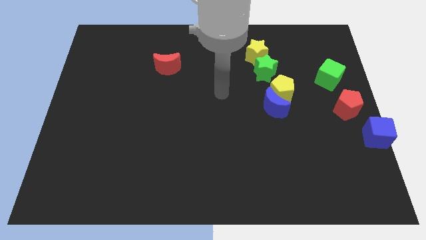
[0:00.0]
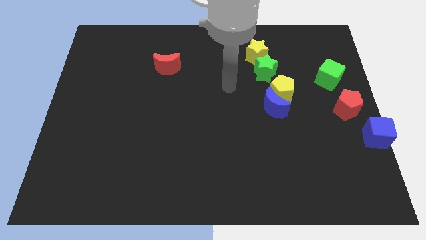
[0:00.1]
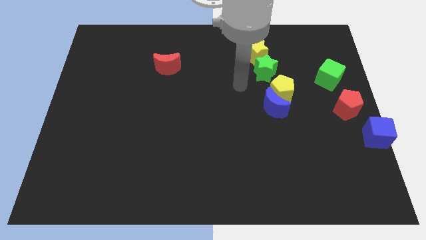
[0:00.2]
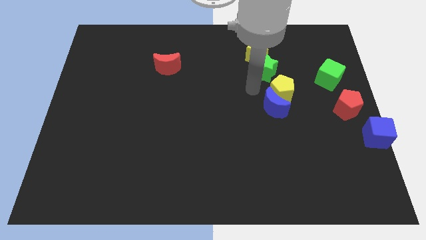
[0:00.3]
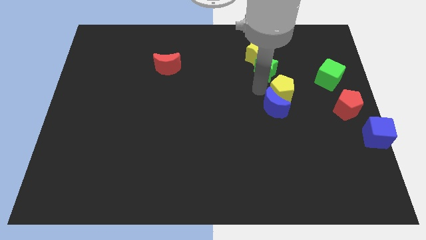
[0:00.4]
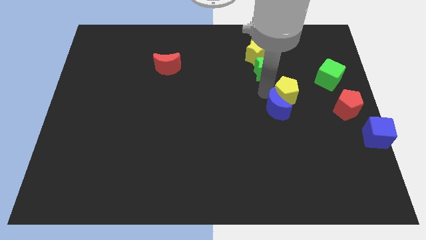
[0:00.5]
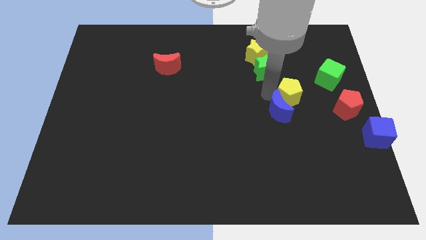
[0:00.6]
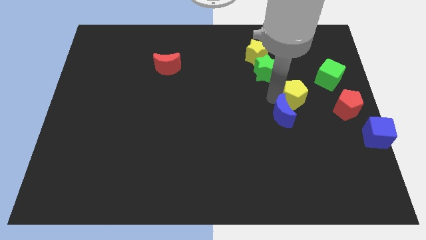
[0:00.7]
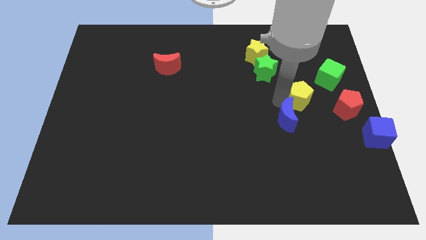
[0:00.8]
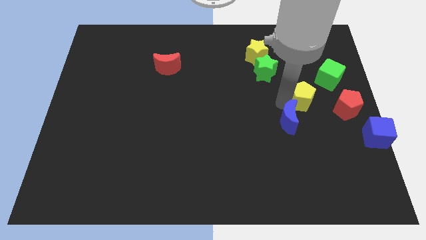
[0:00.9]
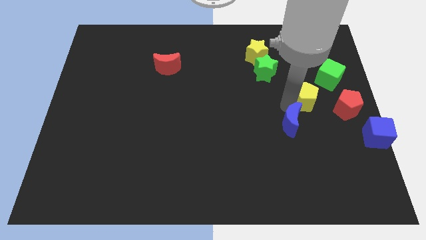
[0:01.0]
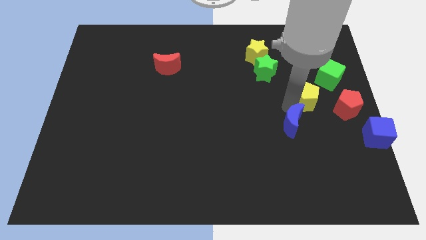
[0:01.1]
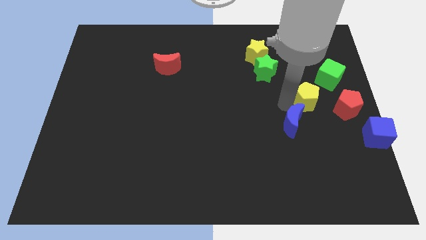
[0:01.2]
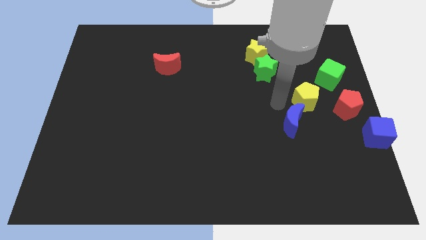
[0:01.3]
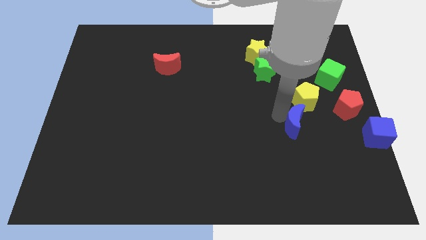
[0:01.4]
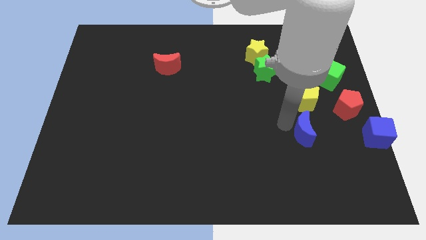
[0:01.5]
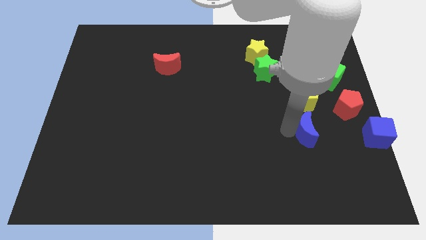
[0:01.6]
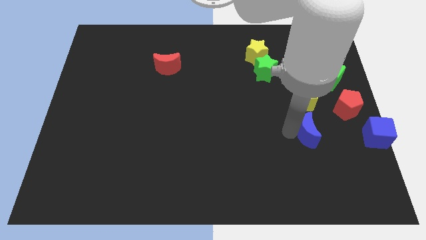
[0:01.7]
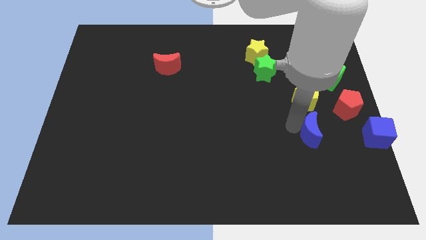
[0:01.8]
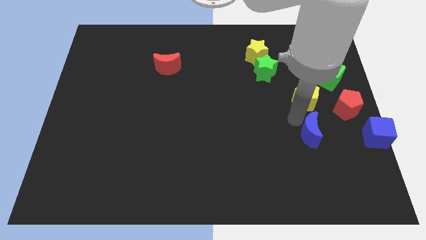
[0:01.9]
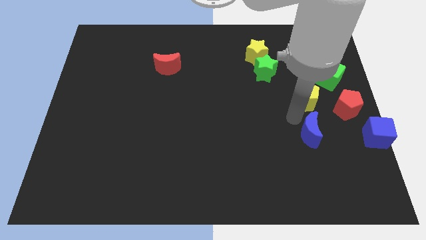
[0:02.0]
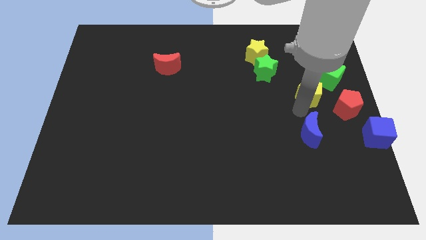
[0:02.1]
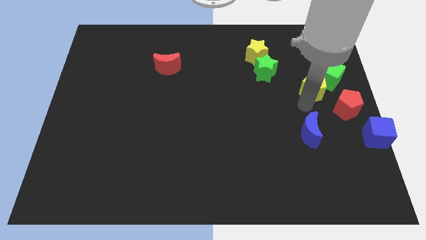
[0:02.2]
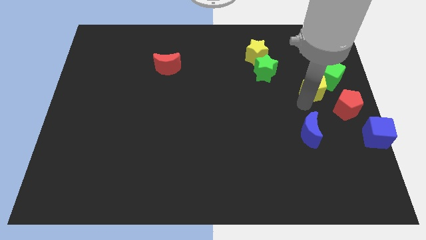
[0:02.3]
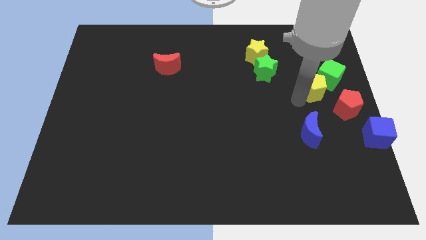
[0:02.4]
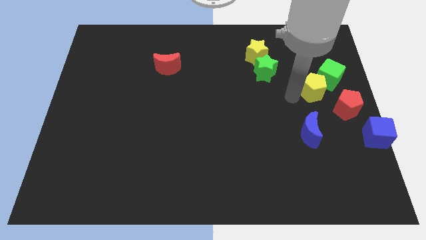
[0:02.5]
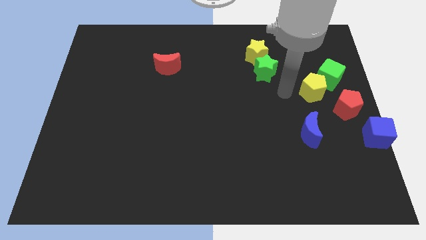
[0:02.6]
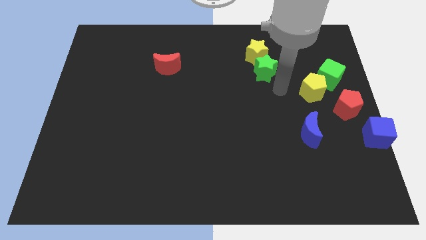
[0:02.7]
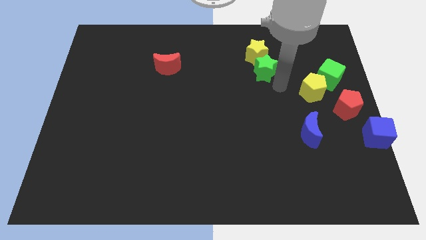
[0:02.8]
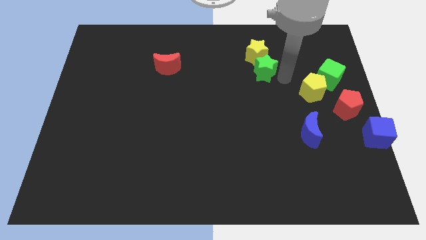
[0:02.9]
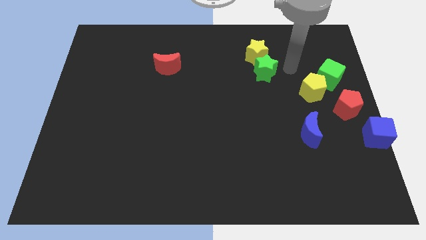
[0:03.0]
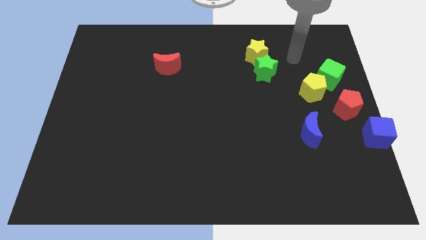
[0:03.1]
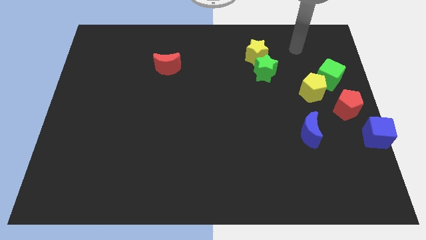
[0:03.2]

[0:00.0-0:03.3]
separate blue crescent and the yellow pentagon

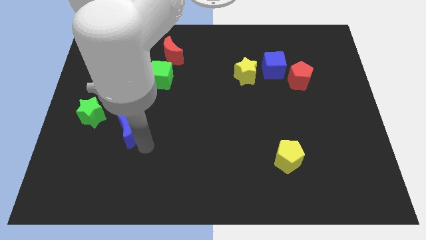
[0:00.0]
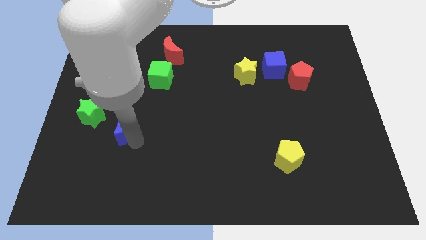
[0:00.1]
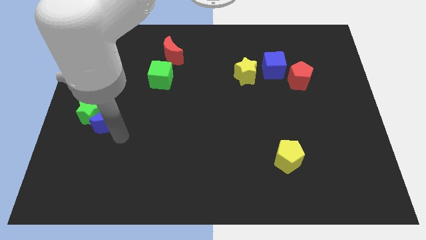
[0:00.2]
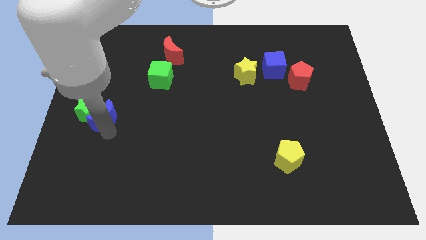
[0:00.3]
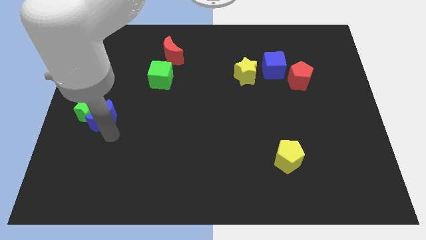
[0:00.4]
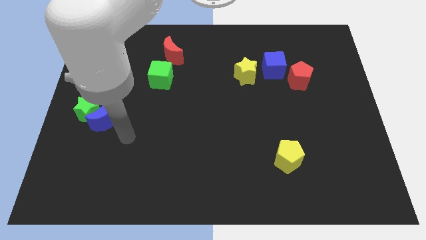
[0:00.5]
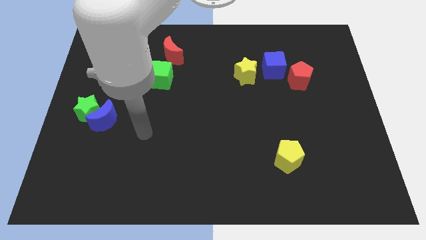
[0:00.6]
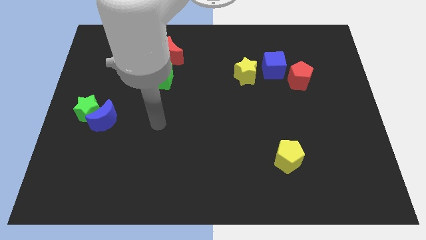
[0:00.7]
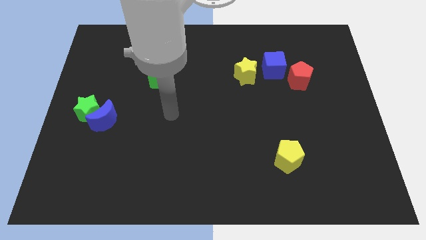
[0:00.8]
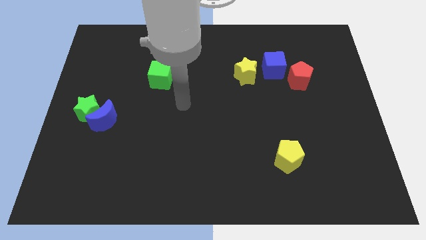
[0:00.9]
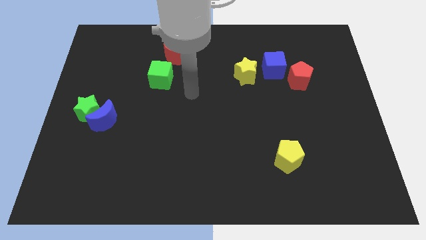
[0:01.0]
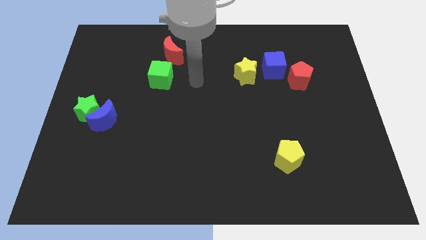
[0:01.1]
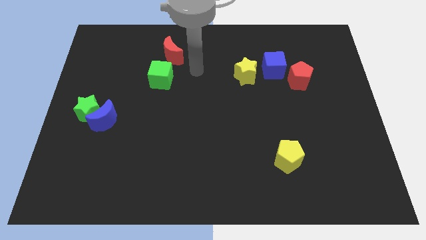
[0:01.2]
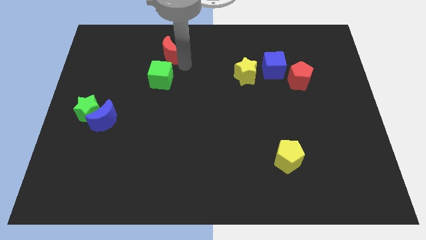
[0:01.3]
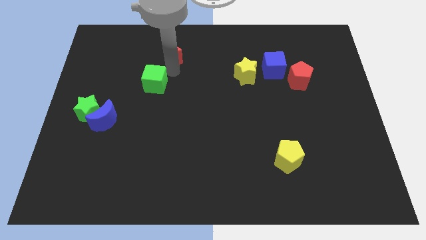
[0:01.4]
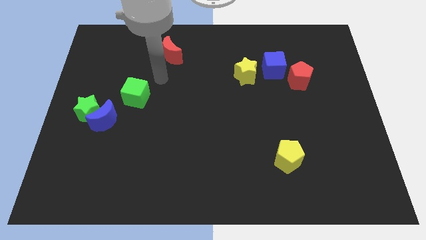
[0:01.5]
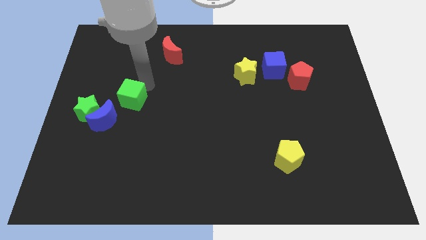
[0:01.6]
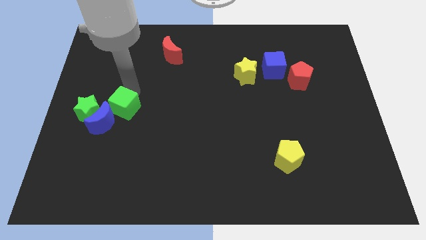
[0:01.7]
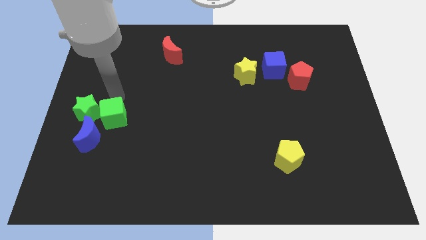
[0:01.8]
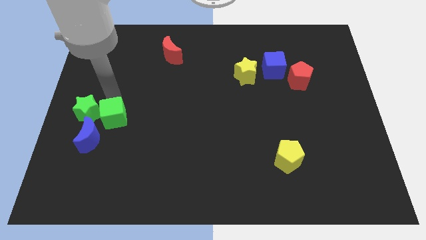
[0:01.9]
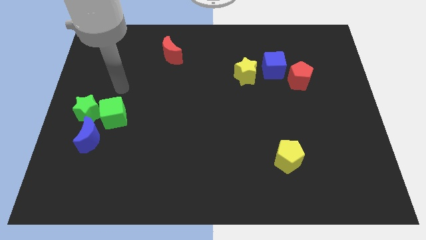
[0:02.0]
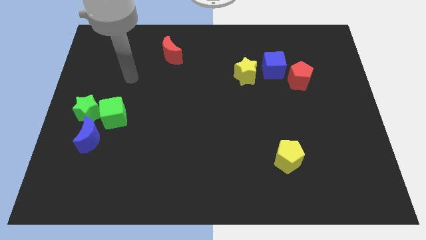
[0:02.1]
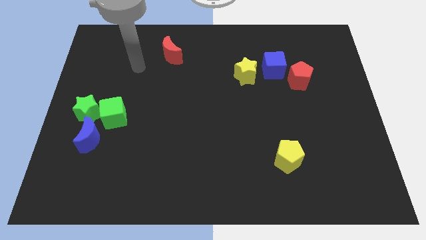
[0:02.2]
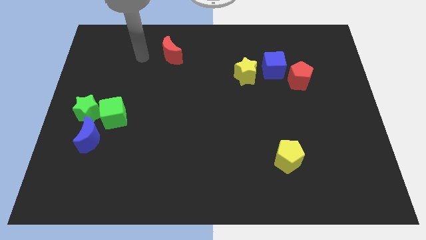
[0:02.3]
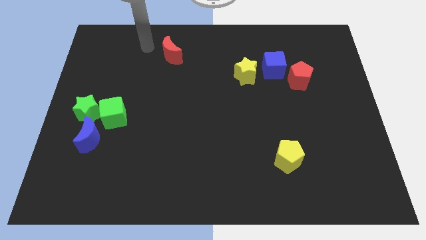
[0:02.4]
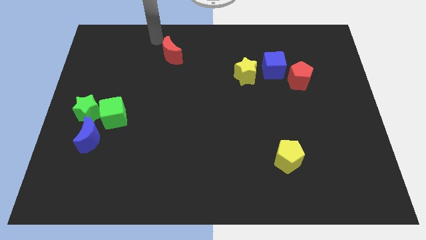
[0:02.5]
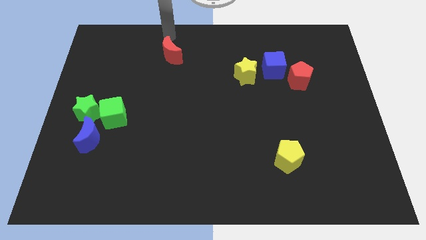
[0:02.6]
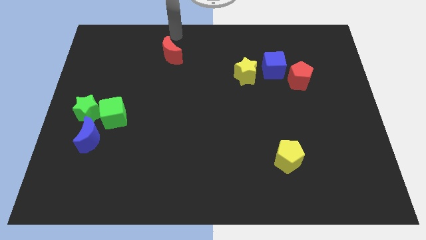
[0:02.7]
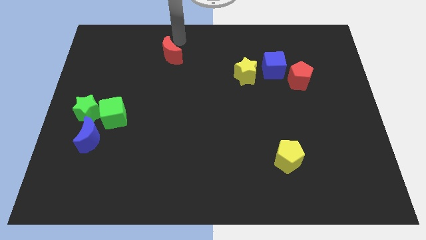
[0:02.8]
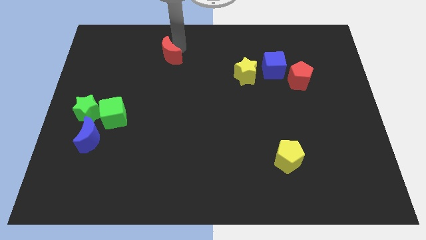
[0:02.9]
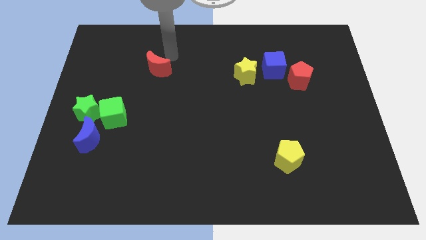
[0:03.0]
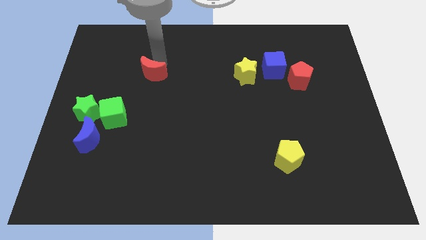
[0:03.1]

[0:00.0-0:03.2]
separate the green cube from the red moon

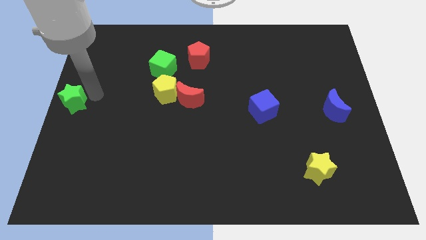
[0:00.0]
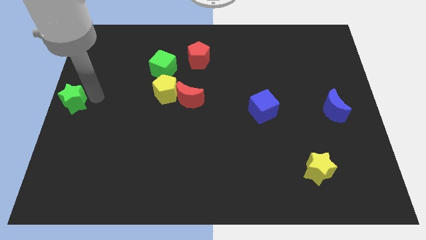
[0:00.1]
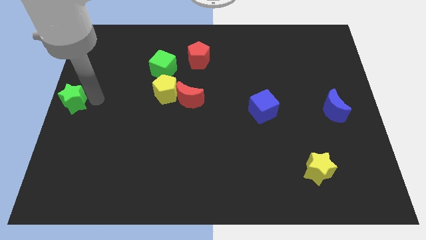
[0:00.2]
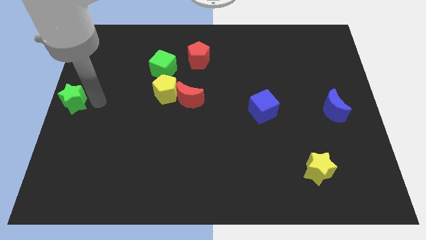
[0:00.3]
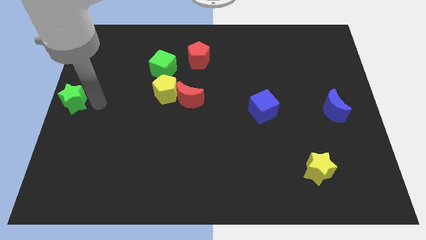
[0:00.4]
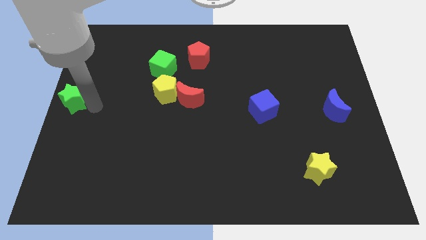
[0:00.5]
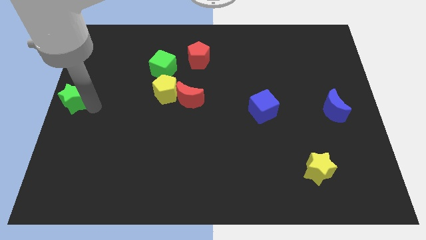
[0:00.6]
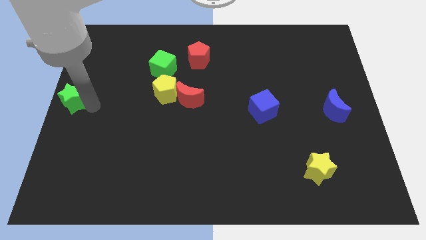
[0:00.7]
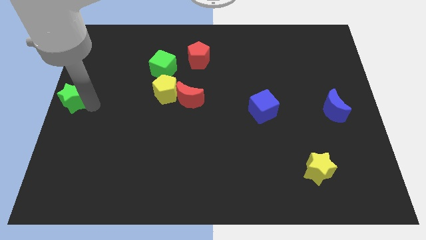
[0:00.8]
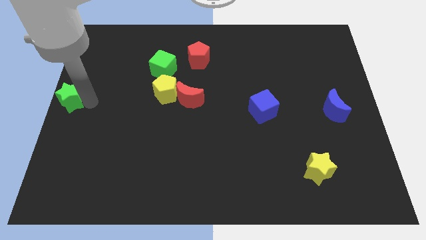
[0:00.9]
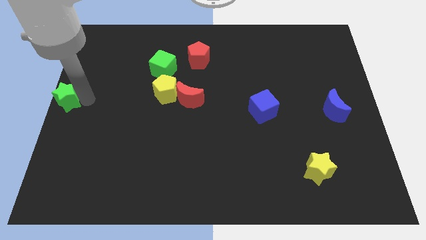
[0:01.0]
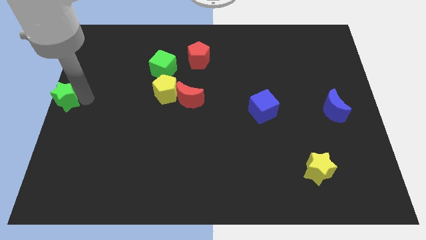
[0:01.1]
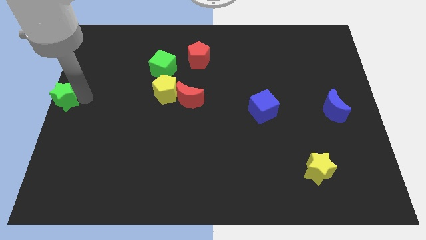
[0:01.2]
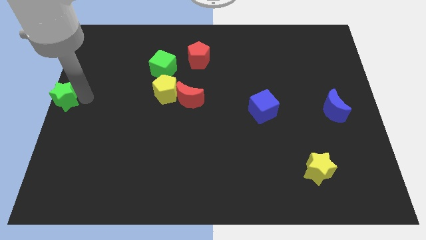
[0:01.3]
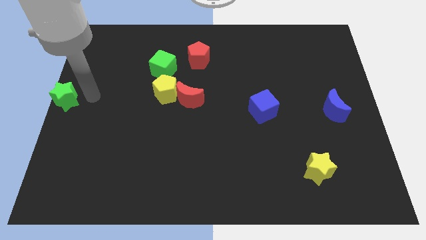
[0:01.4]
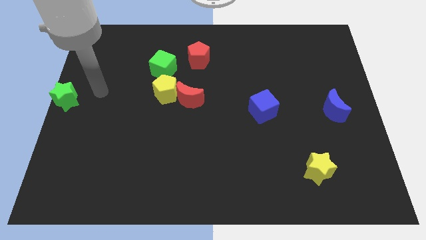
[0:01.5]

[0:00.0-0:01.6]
place the green star to the left center of the board

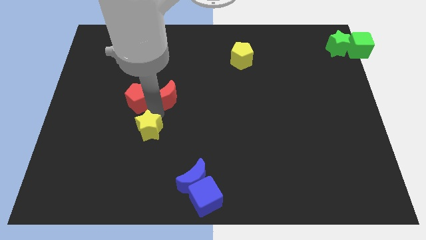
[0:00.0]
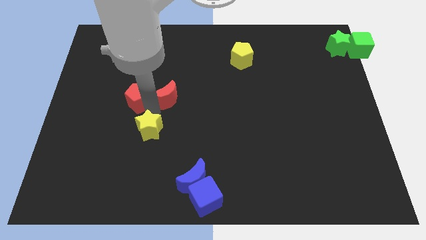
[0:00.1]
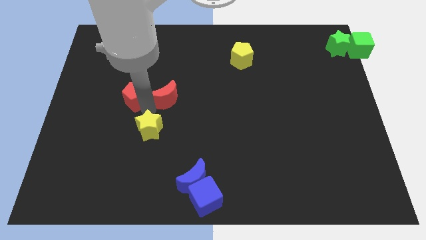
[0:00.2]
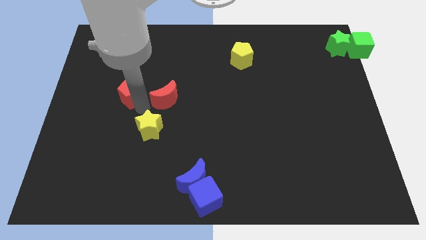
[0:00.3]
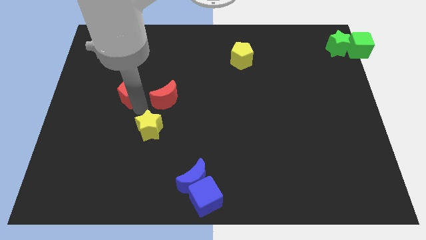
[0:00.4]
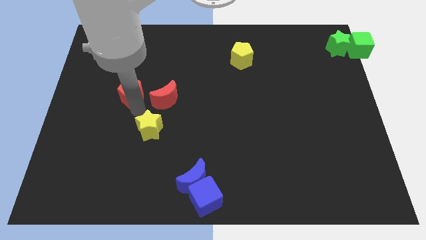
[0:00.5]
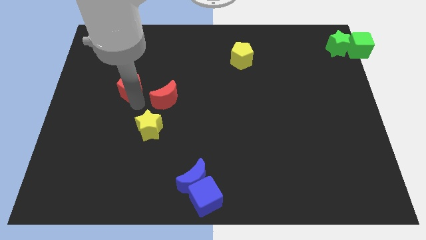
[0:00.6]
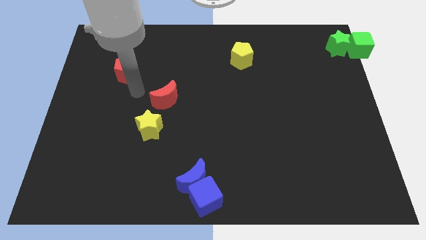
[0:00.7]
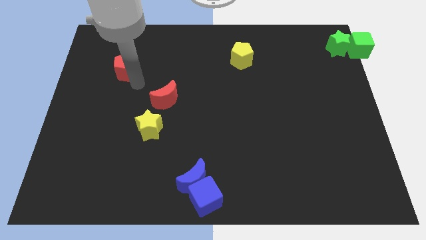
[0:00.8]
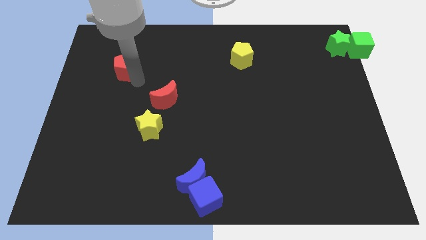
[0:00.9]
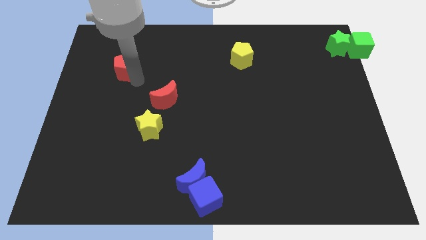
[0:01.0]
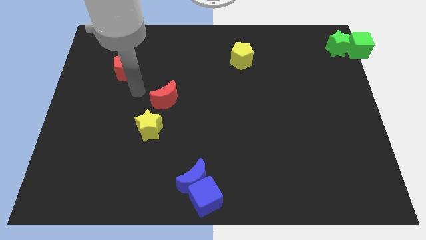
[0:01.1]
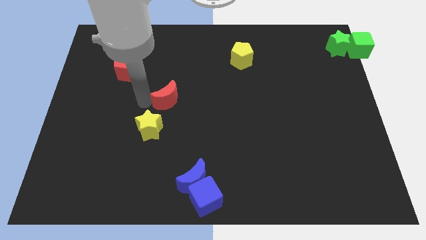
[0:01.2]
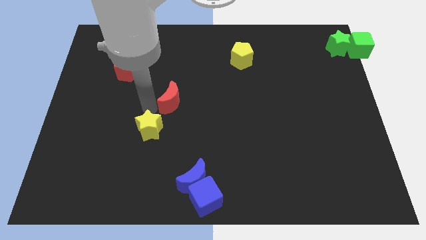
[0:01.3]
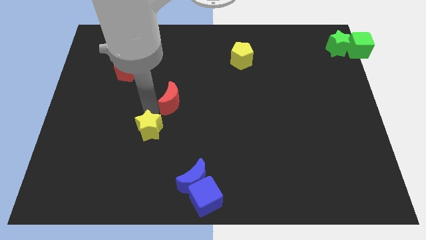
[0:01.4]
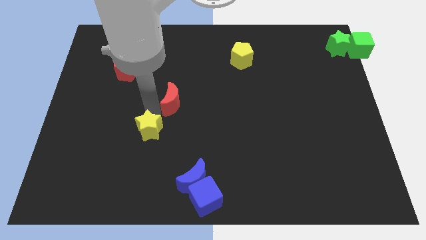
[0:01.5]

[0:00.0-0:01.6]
separate the red pentagon from the red crescent
